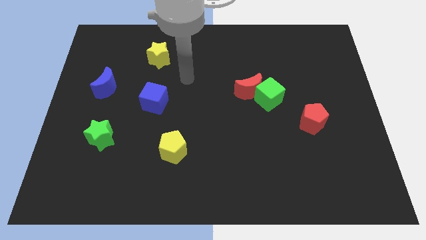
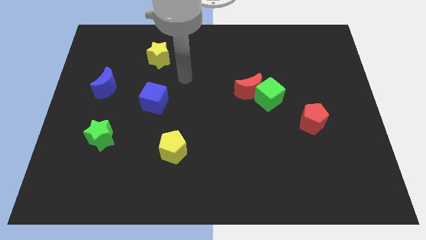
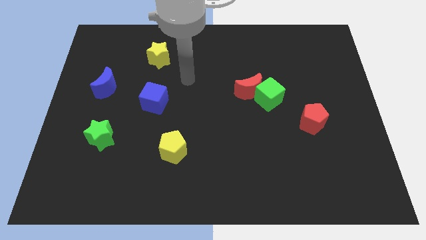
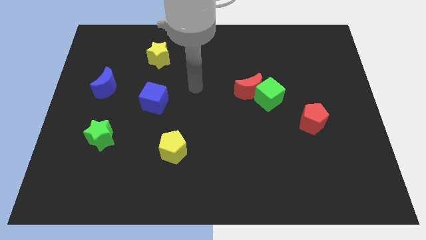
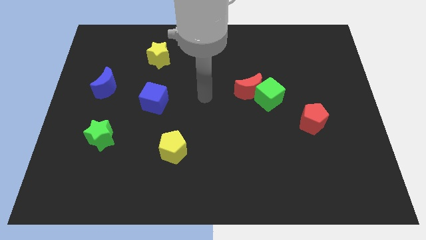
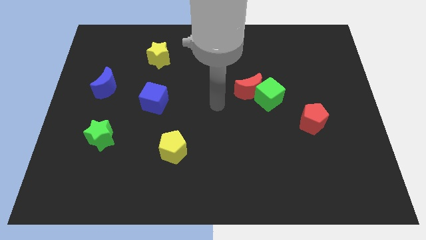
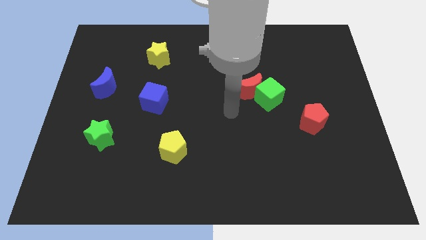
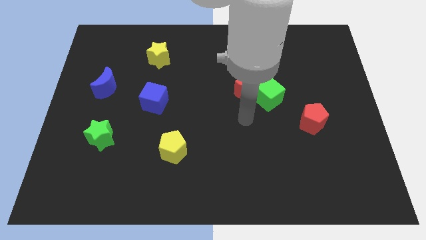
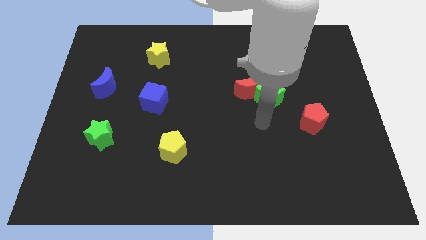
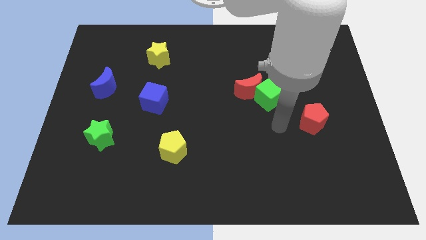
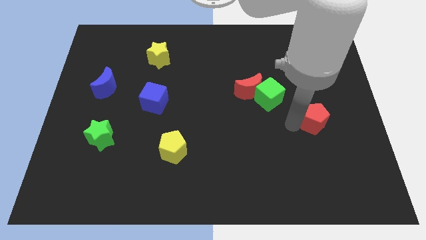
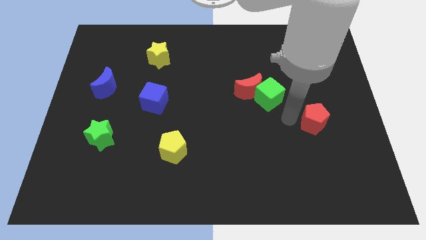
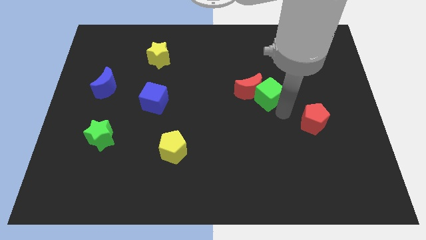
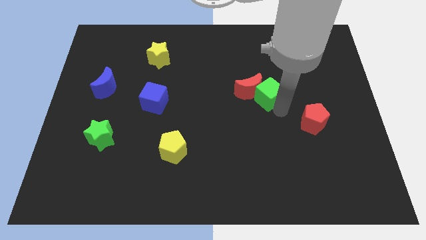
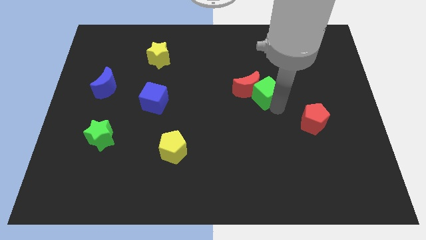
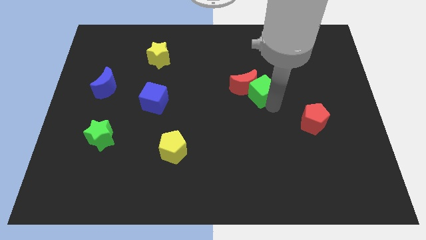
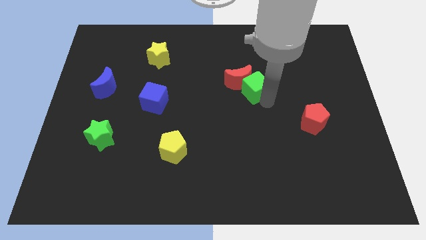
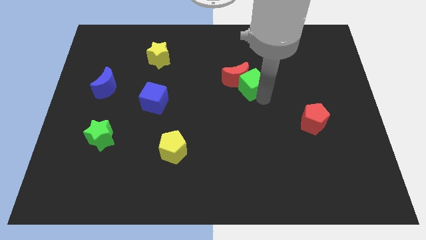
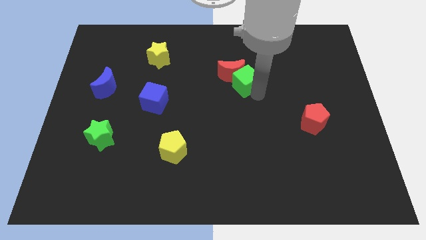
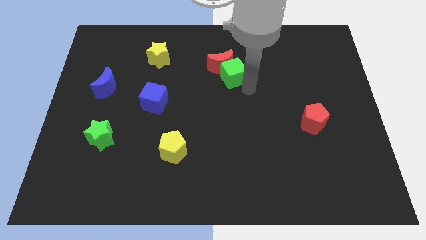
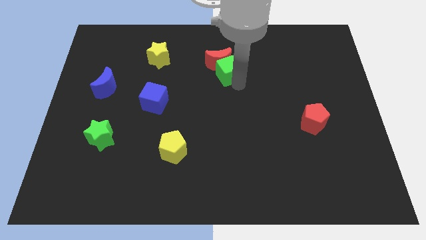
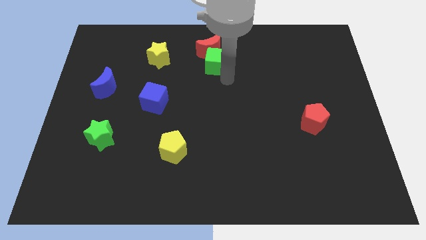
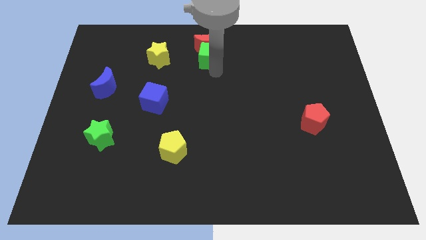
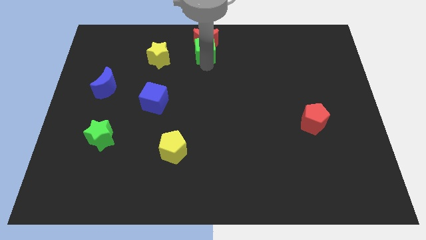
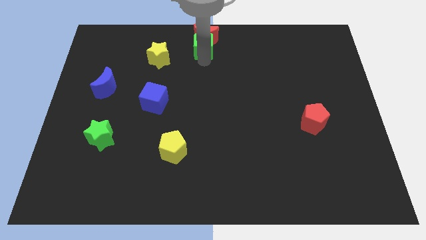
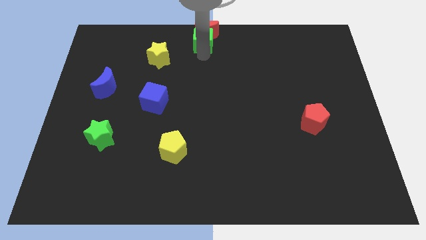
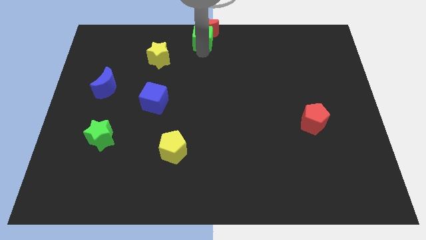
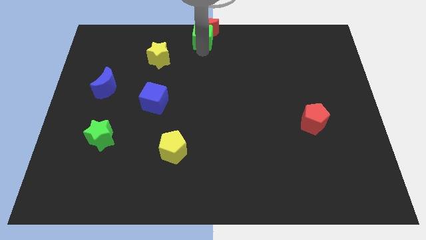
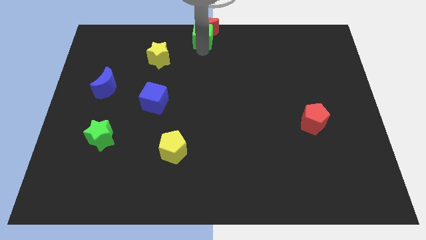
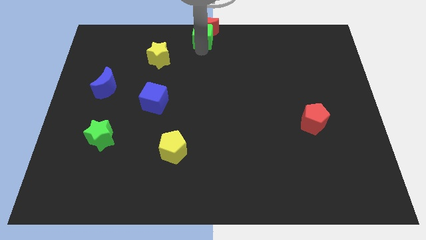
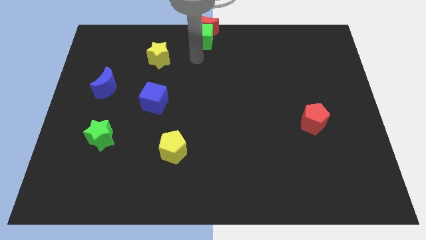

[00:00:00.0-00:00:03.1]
push the red and green blocks to the top center of the board

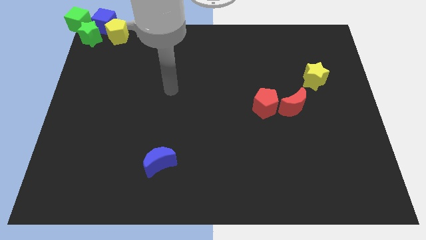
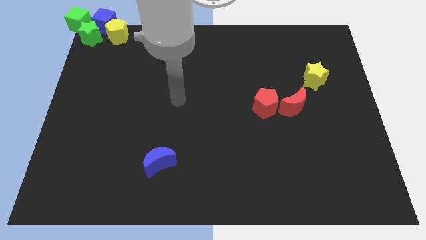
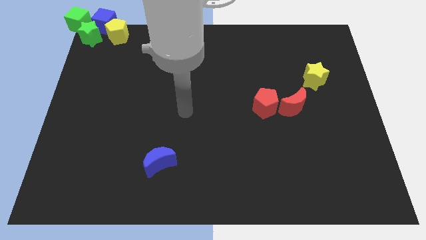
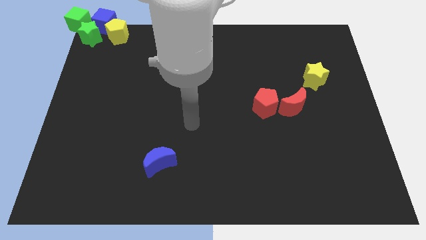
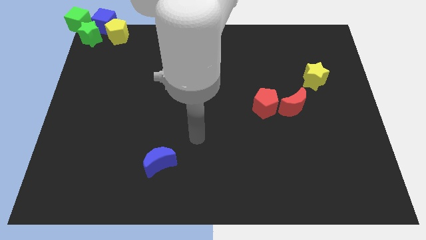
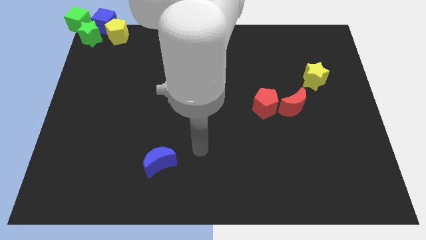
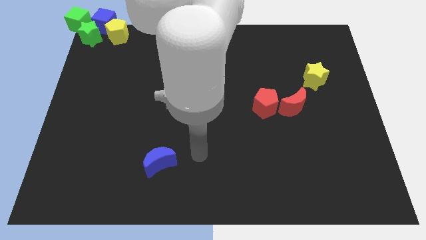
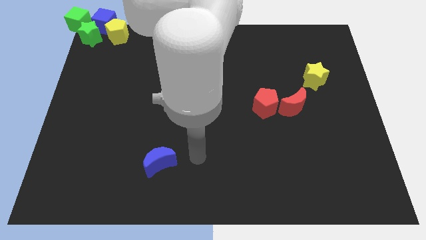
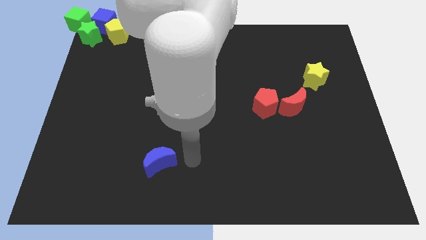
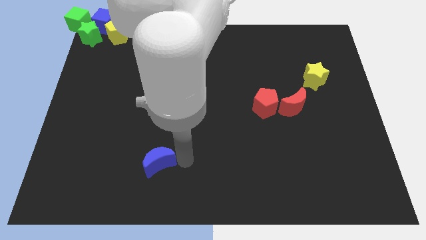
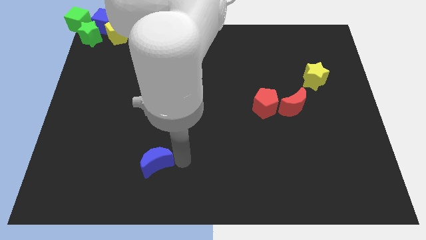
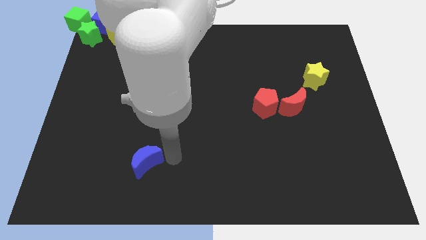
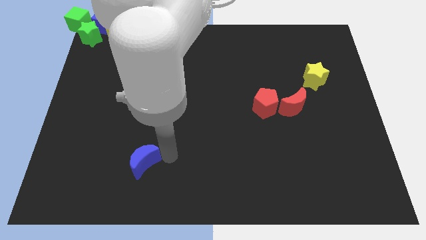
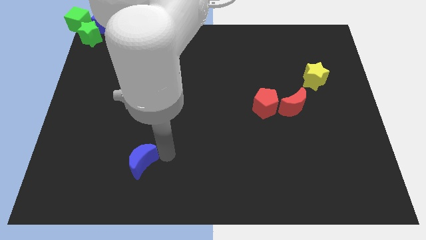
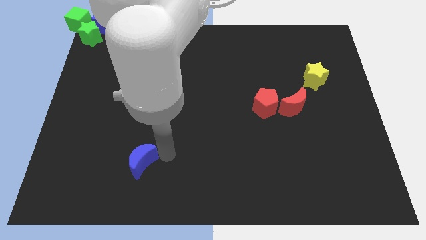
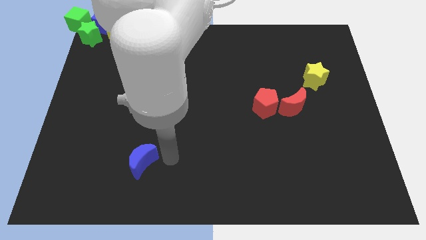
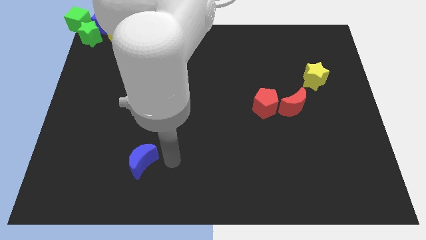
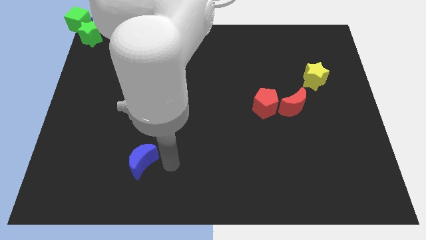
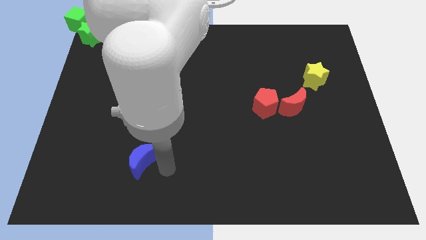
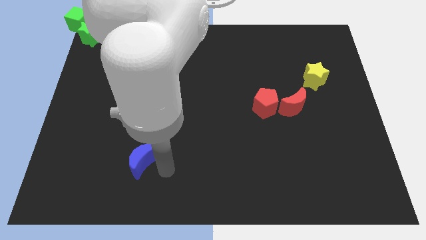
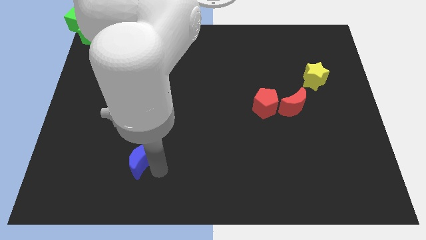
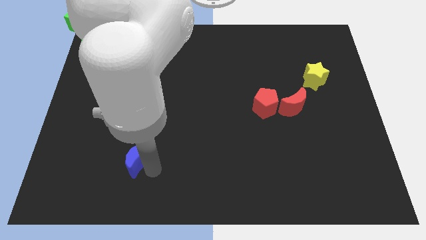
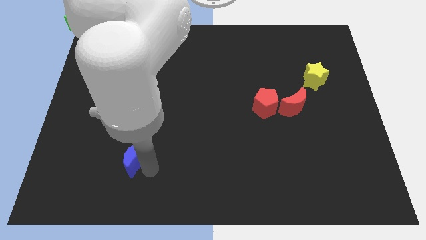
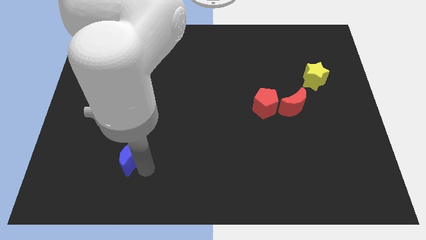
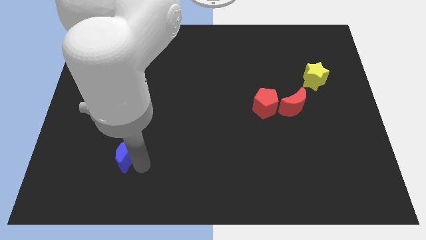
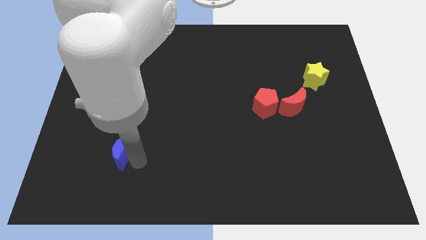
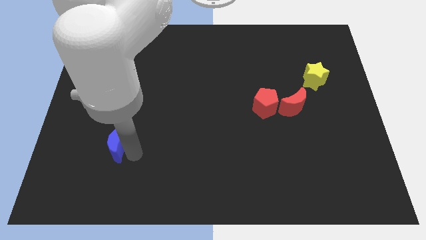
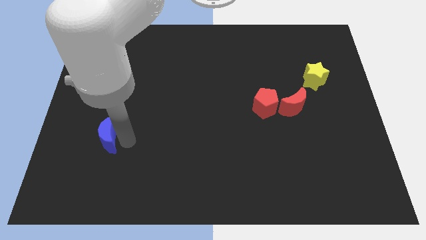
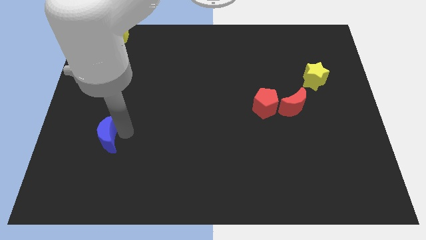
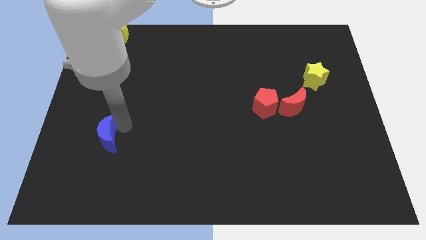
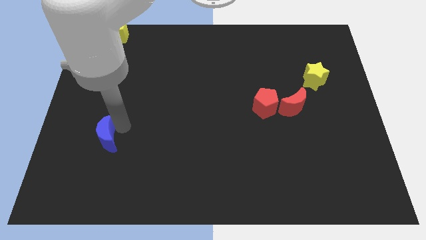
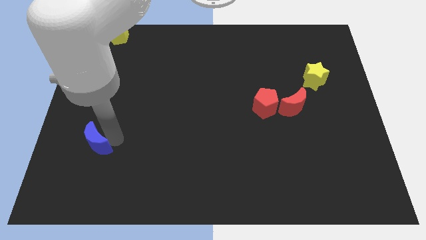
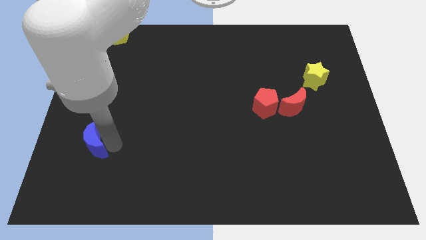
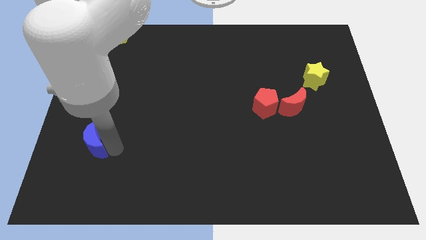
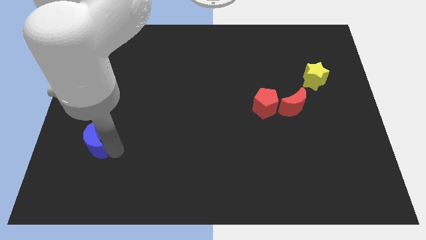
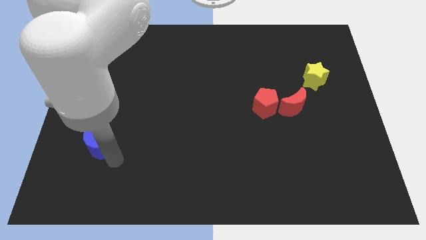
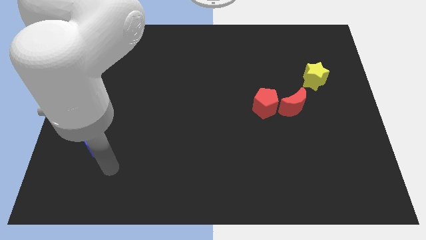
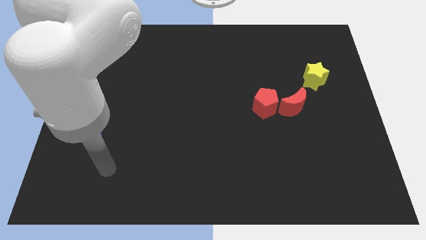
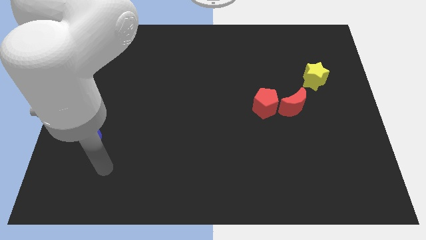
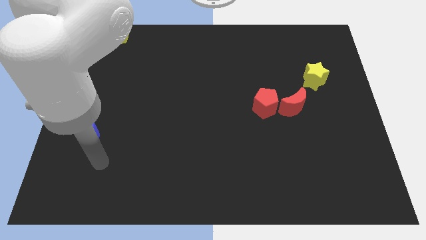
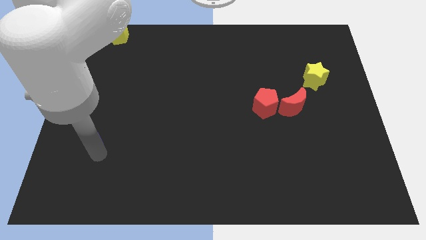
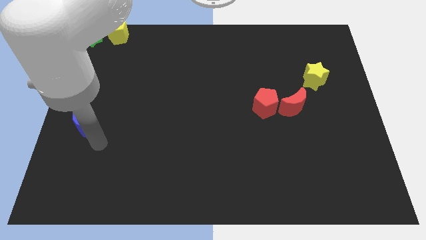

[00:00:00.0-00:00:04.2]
push the blue moon to the left side of the board

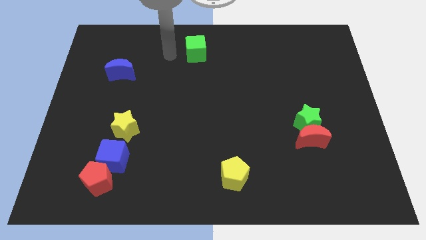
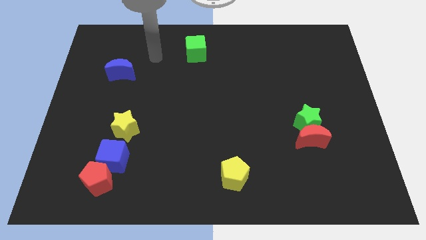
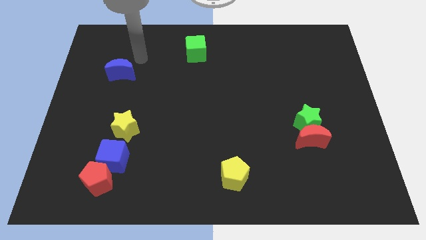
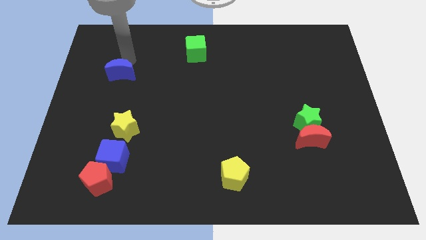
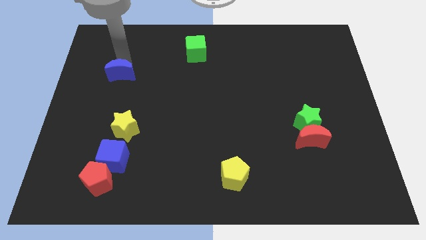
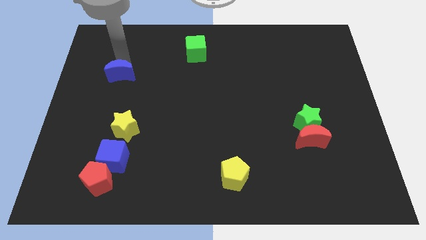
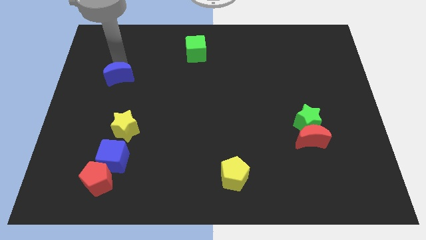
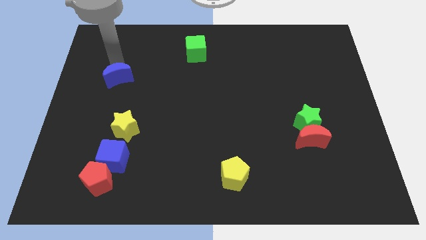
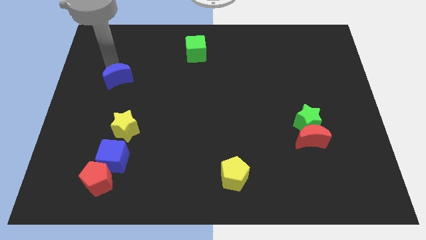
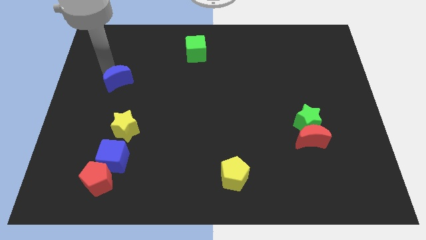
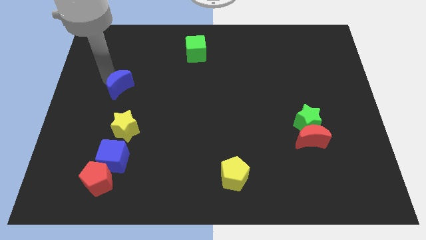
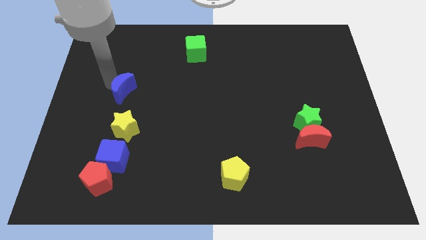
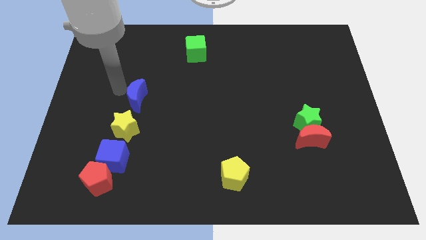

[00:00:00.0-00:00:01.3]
move the blue crescent slightly to the bottom

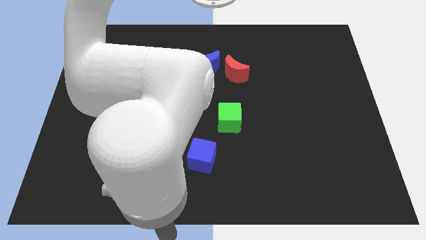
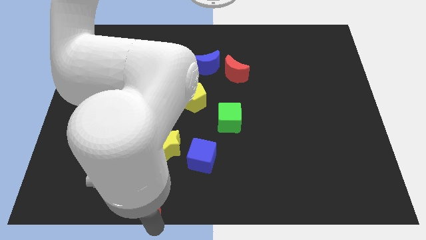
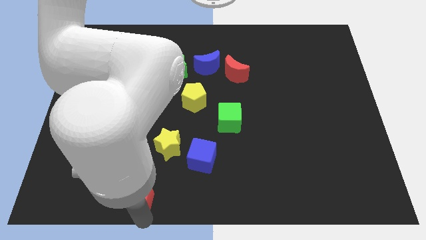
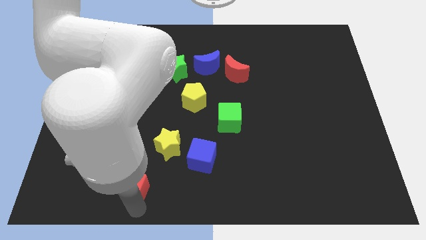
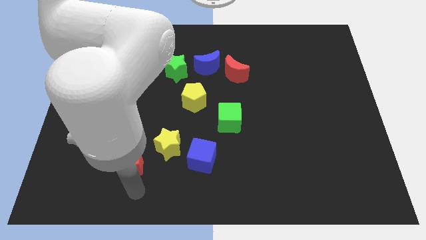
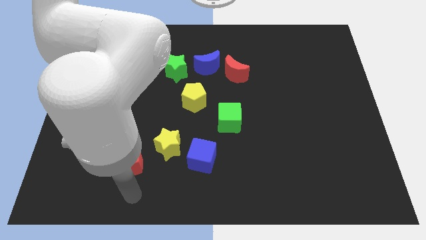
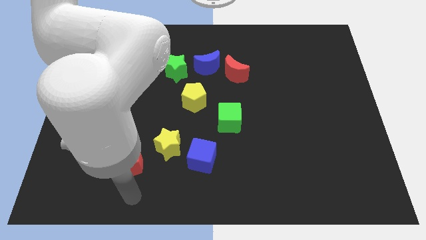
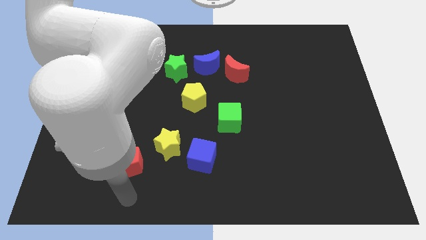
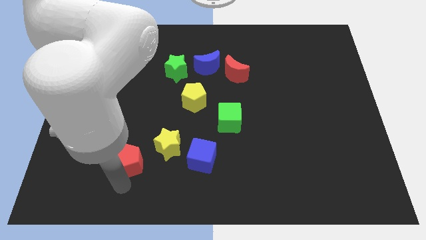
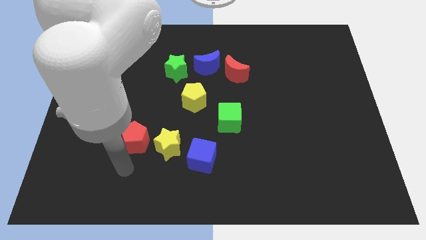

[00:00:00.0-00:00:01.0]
place the red pentagon to the left of the yellow star
